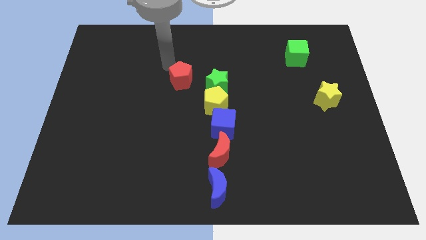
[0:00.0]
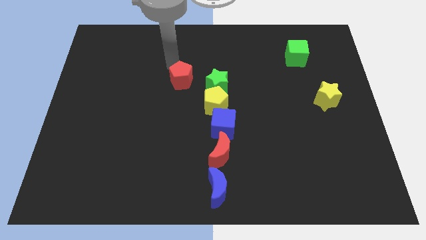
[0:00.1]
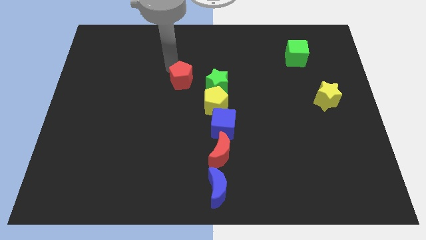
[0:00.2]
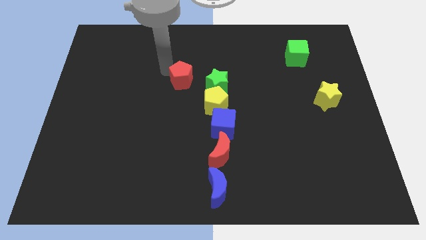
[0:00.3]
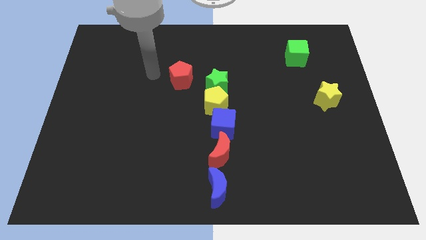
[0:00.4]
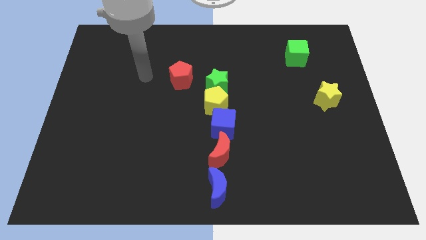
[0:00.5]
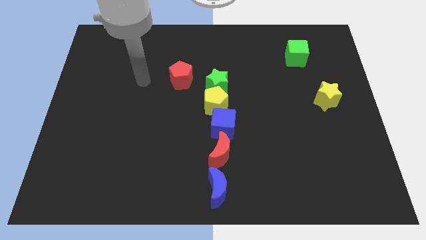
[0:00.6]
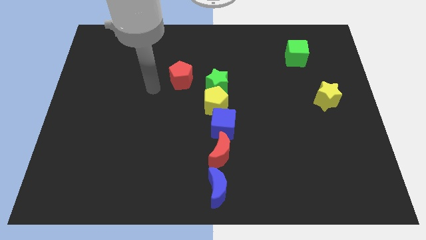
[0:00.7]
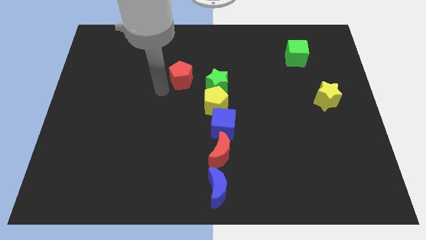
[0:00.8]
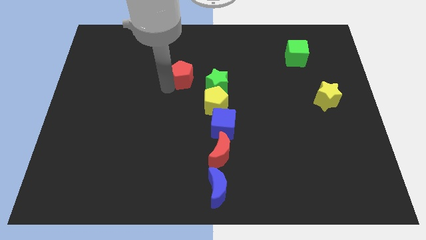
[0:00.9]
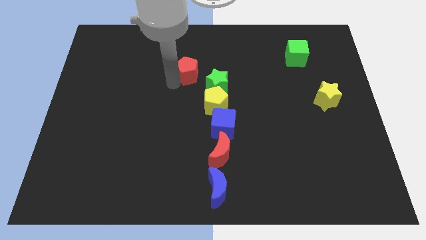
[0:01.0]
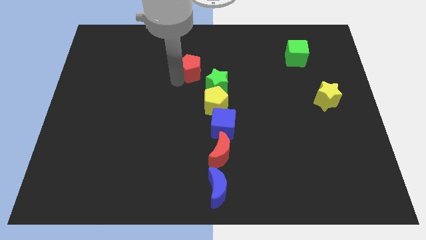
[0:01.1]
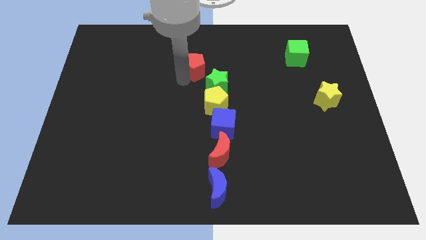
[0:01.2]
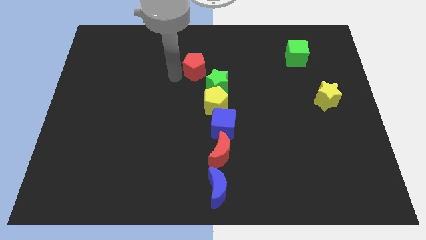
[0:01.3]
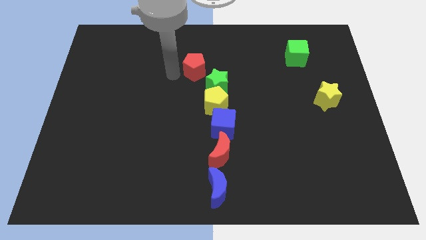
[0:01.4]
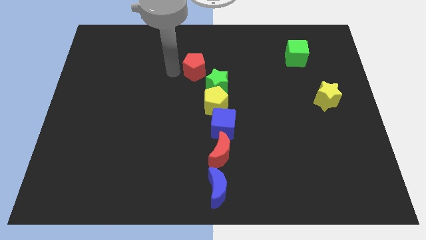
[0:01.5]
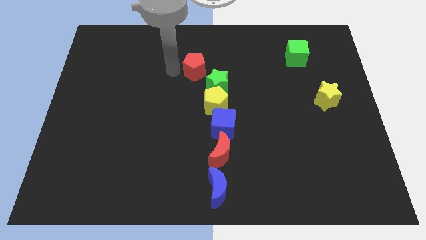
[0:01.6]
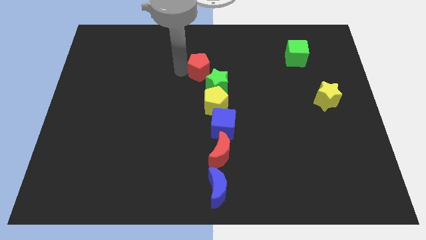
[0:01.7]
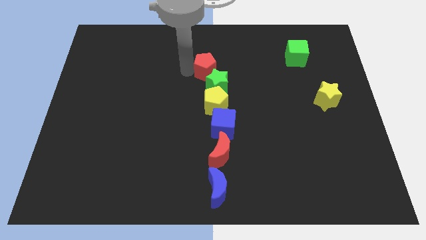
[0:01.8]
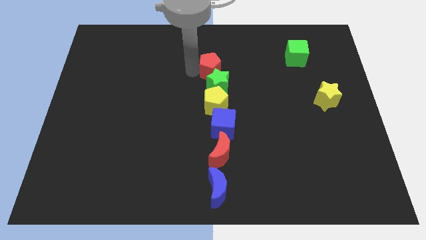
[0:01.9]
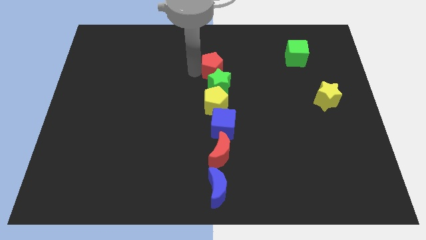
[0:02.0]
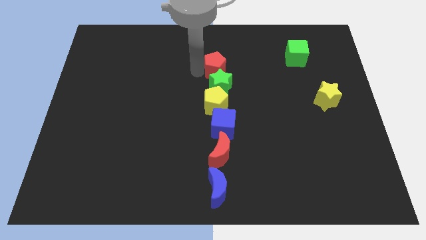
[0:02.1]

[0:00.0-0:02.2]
place the red pentagon above green star

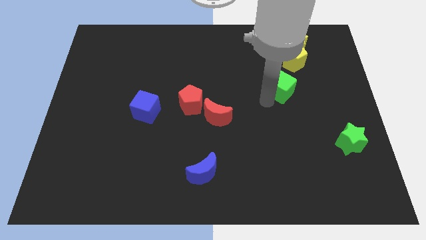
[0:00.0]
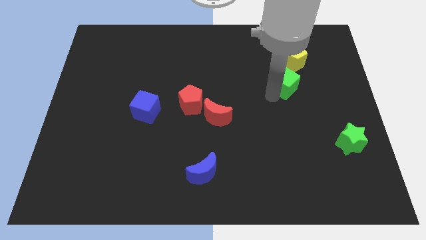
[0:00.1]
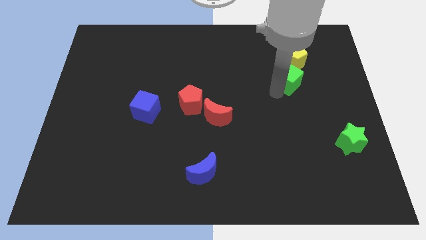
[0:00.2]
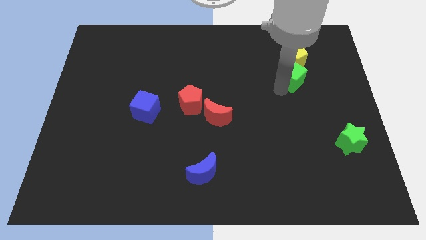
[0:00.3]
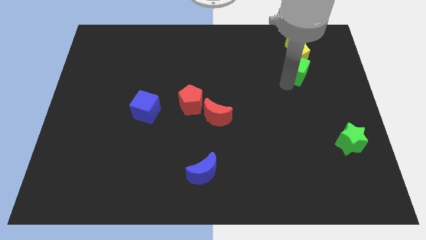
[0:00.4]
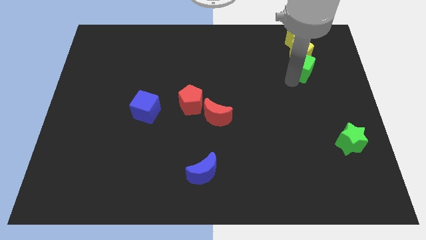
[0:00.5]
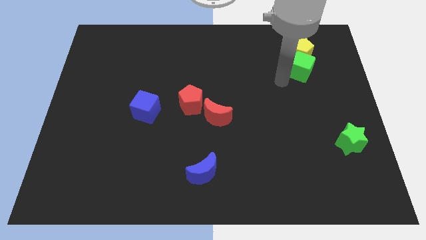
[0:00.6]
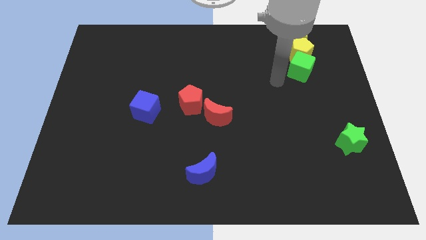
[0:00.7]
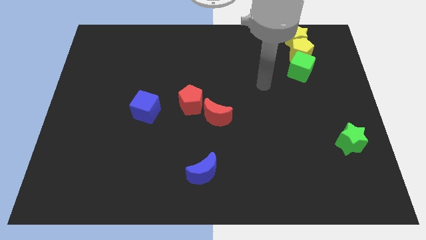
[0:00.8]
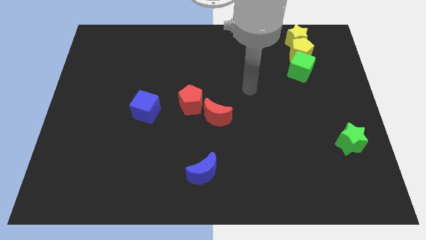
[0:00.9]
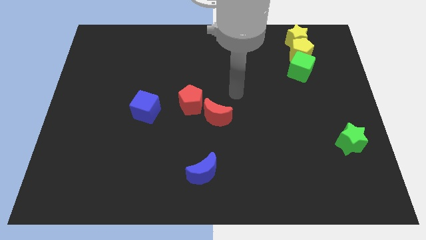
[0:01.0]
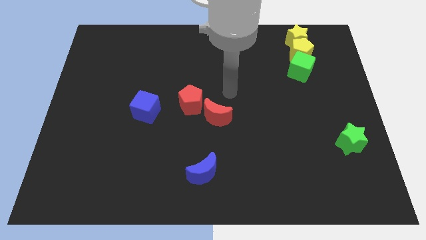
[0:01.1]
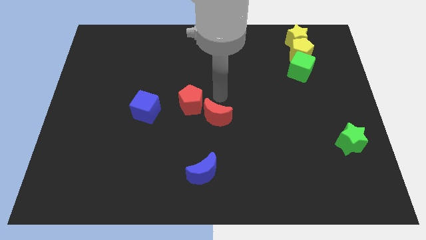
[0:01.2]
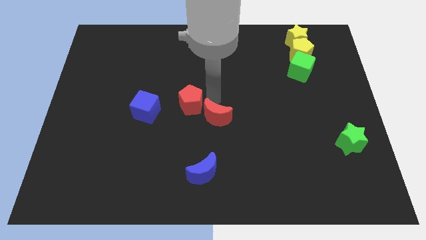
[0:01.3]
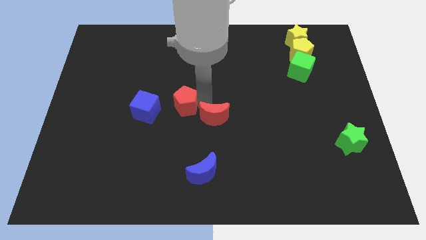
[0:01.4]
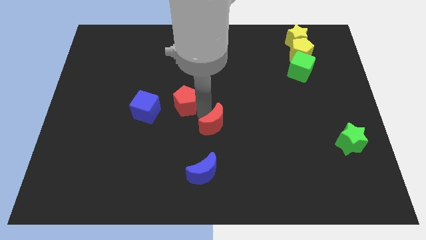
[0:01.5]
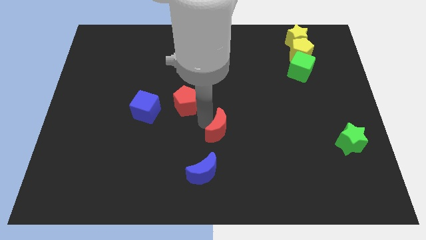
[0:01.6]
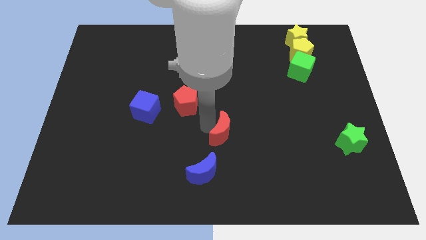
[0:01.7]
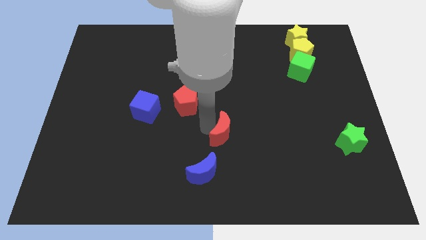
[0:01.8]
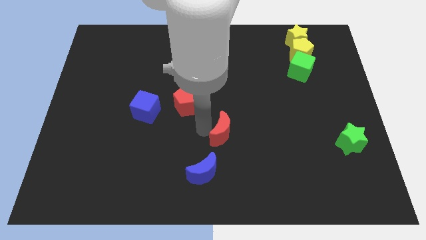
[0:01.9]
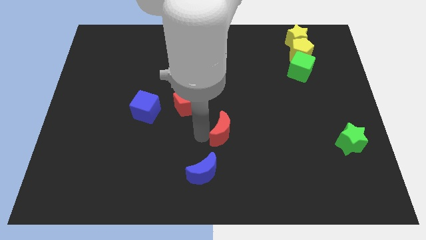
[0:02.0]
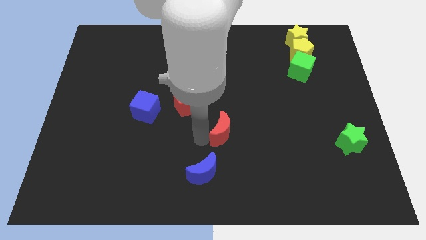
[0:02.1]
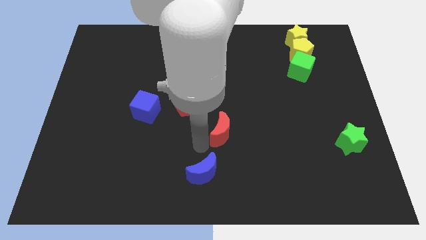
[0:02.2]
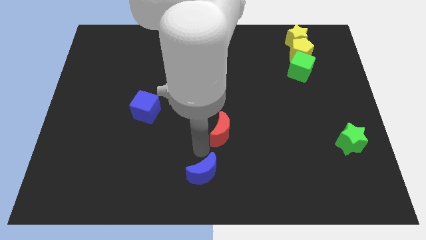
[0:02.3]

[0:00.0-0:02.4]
separate the red moon and red pentagon

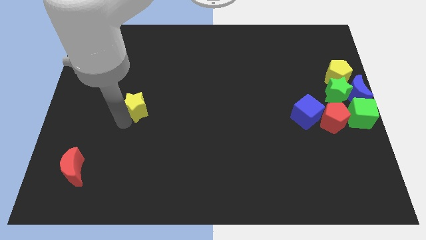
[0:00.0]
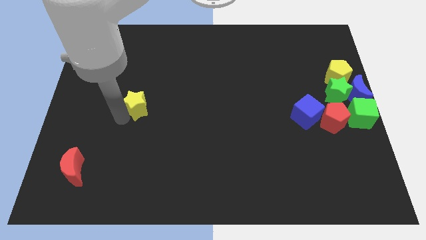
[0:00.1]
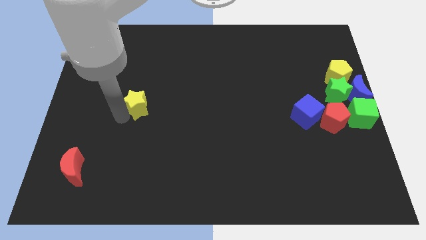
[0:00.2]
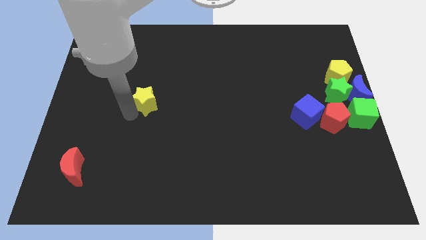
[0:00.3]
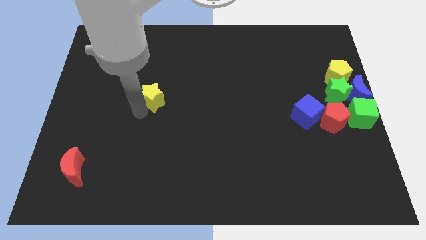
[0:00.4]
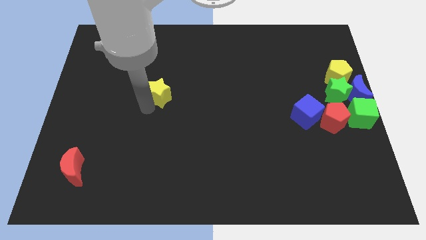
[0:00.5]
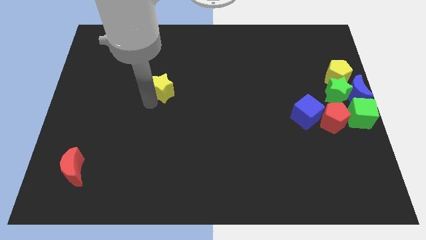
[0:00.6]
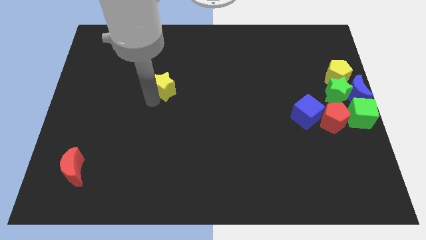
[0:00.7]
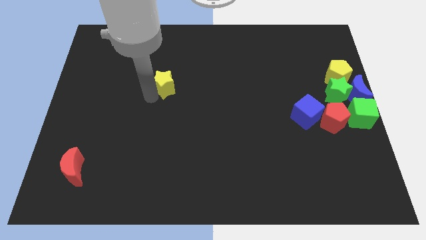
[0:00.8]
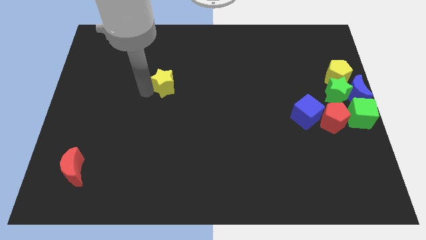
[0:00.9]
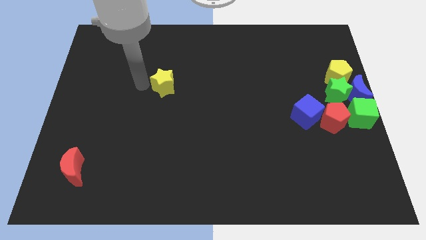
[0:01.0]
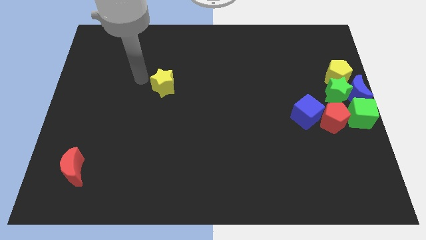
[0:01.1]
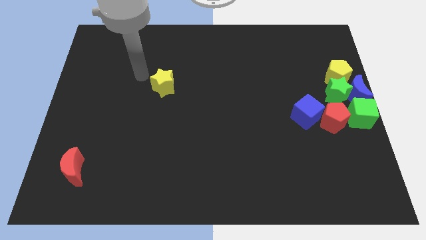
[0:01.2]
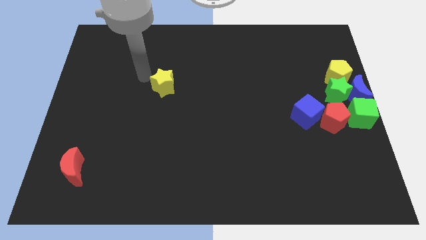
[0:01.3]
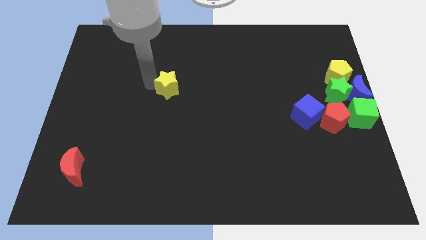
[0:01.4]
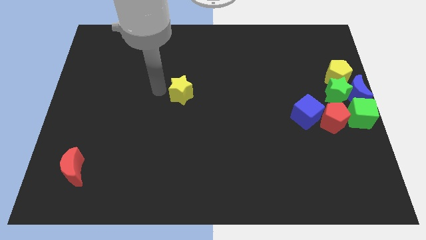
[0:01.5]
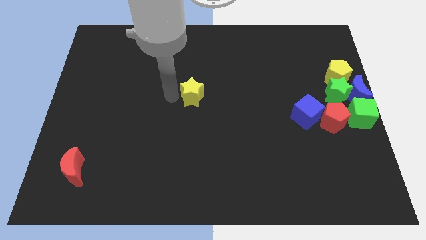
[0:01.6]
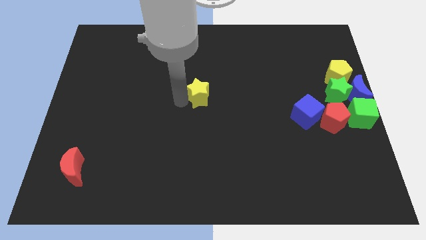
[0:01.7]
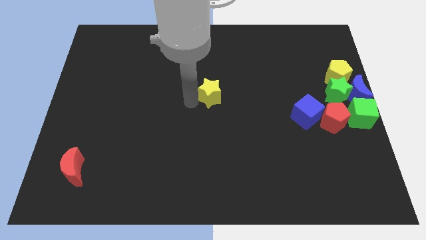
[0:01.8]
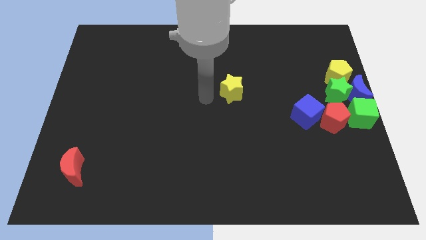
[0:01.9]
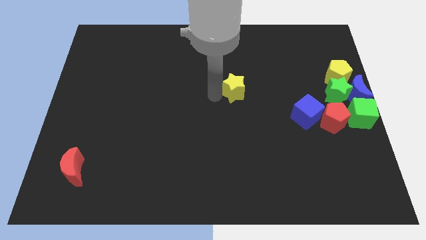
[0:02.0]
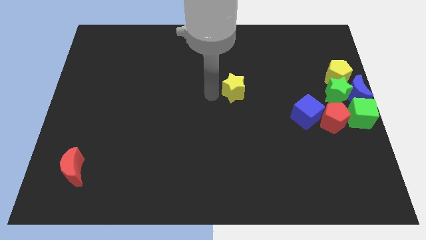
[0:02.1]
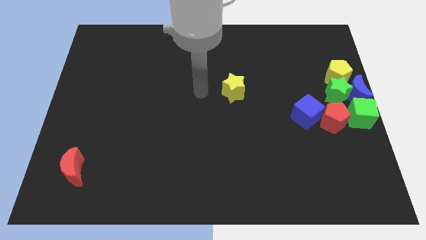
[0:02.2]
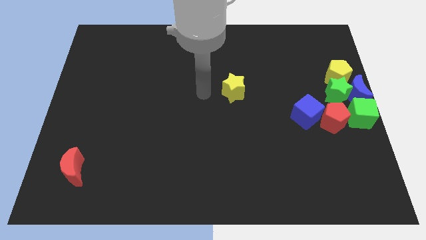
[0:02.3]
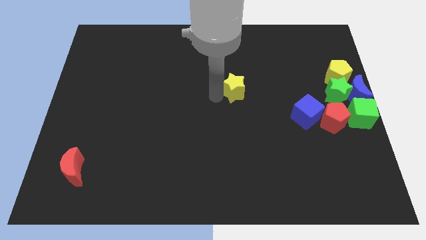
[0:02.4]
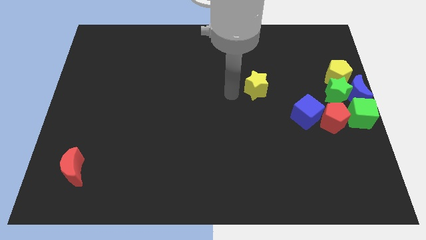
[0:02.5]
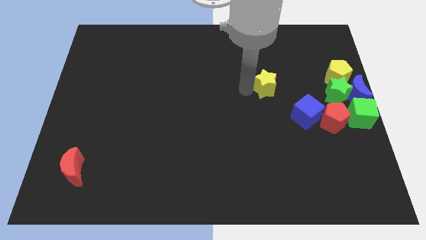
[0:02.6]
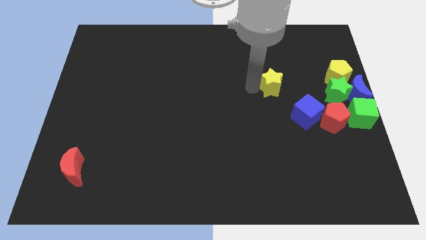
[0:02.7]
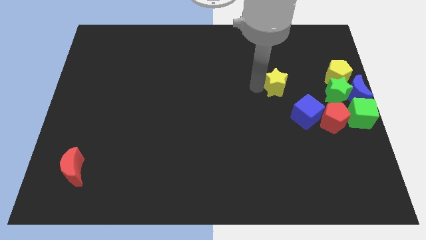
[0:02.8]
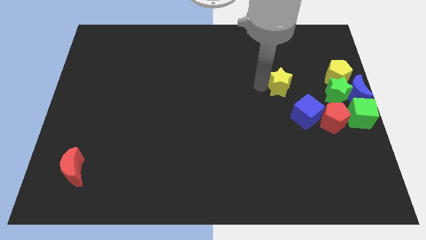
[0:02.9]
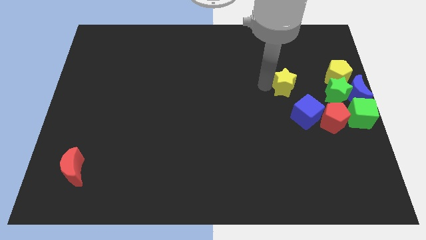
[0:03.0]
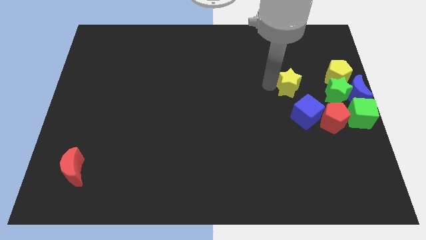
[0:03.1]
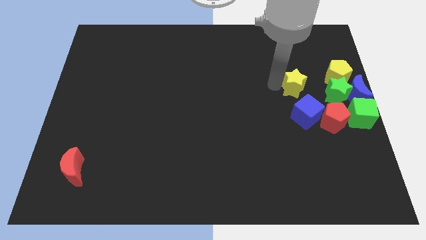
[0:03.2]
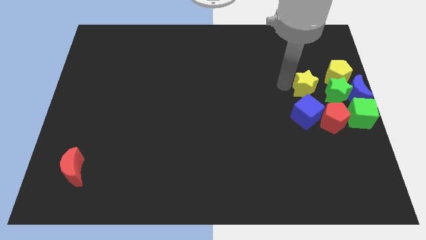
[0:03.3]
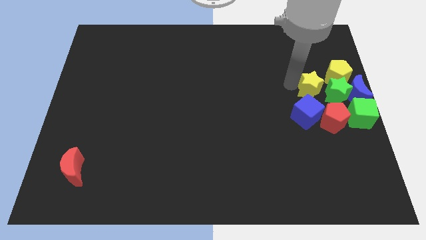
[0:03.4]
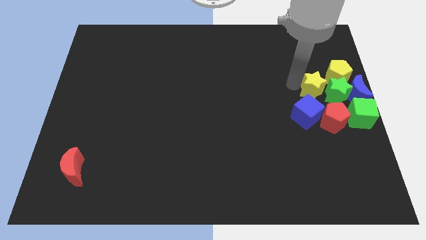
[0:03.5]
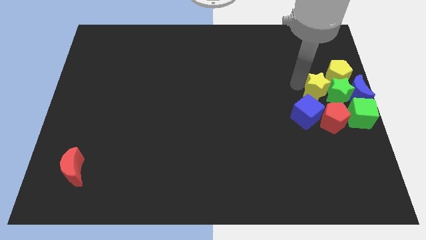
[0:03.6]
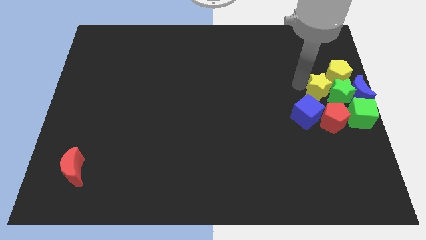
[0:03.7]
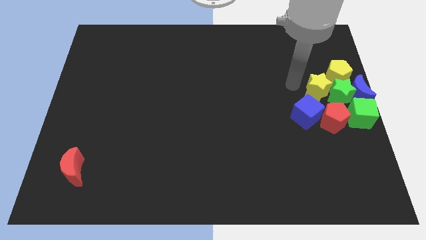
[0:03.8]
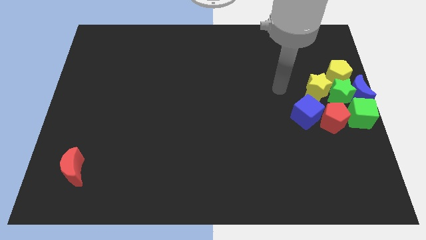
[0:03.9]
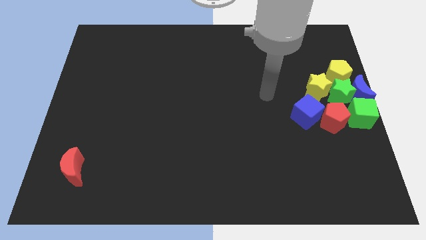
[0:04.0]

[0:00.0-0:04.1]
place the yellow star into the left side of the green star

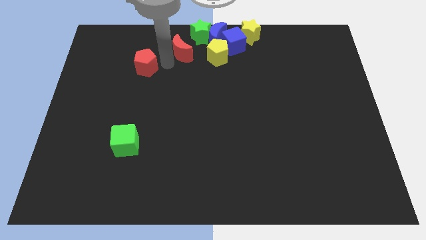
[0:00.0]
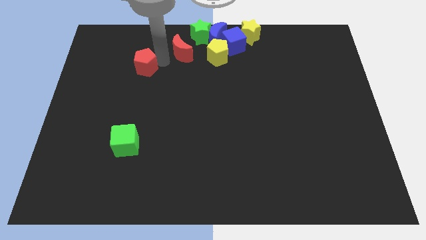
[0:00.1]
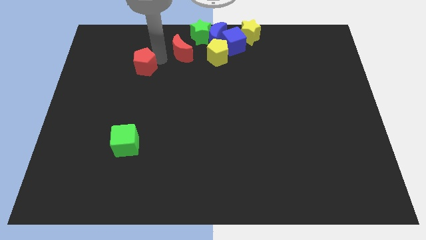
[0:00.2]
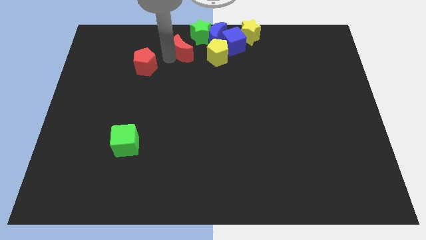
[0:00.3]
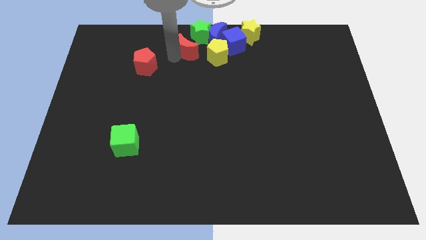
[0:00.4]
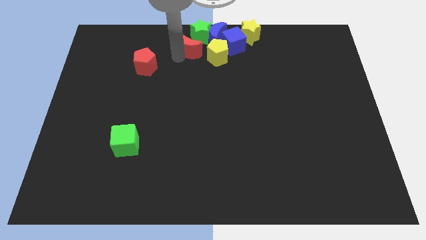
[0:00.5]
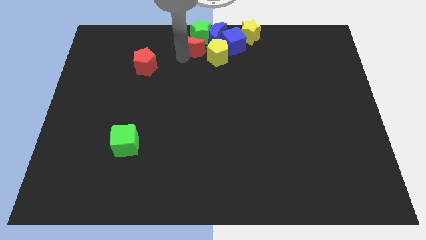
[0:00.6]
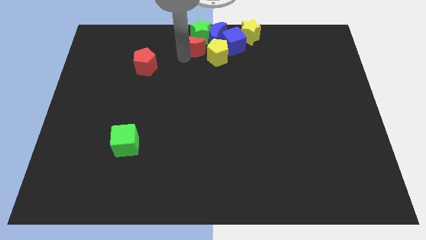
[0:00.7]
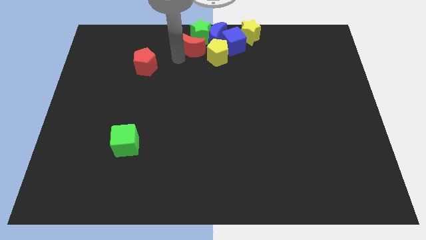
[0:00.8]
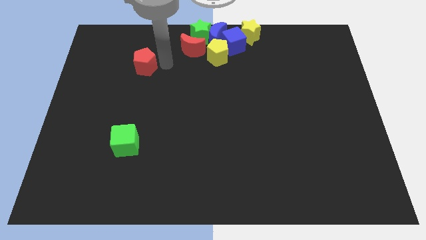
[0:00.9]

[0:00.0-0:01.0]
move the red moon close to the green star
